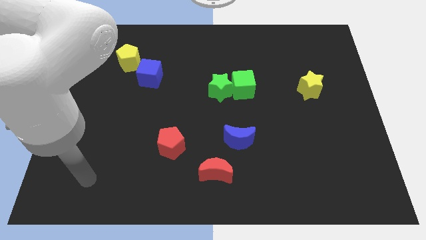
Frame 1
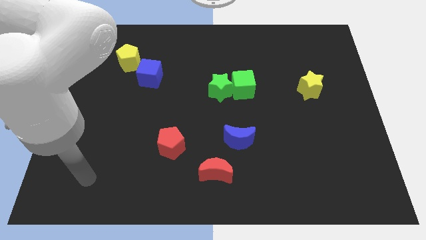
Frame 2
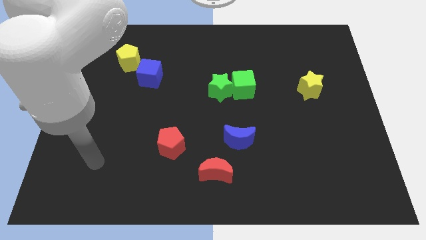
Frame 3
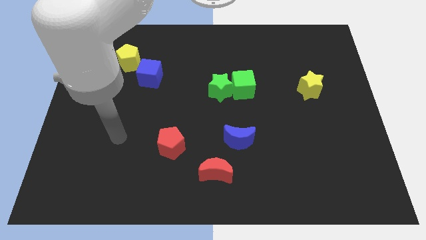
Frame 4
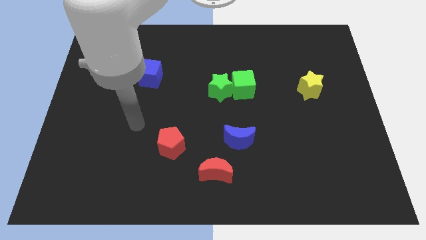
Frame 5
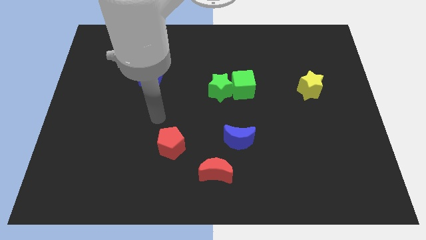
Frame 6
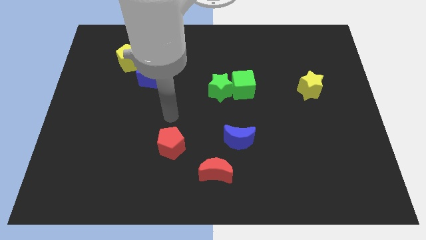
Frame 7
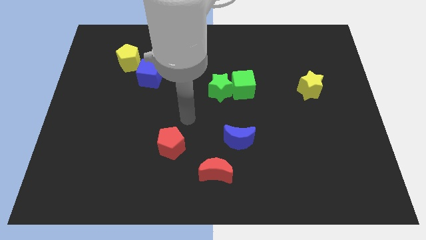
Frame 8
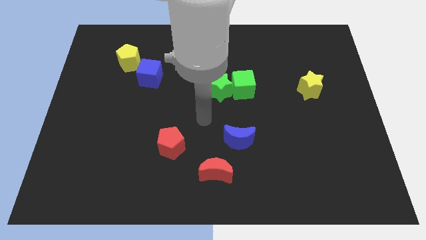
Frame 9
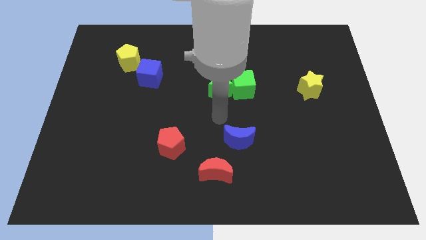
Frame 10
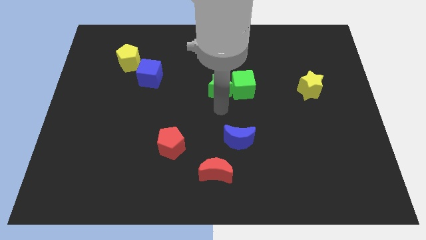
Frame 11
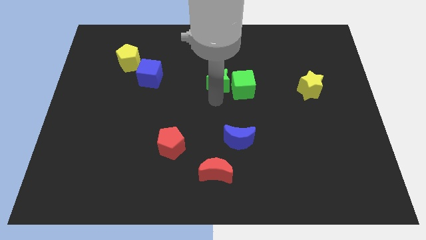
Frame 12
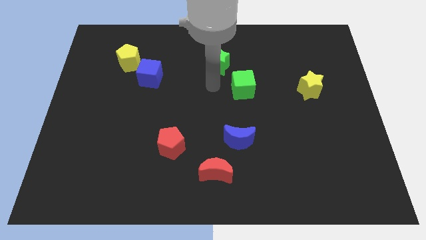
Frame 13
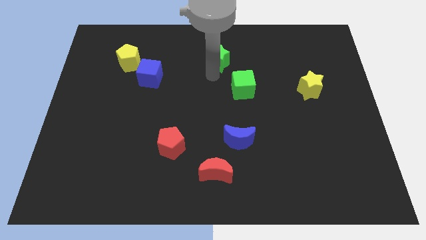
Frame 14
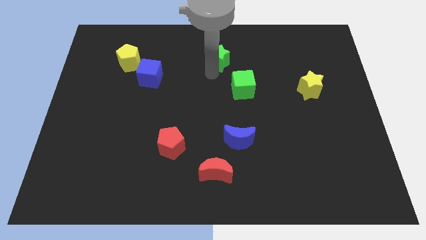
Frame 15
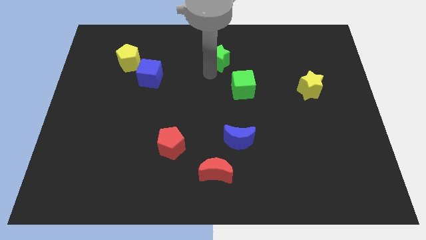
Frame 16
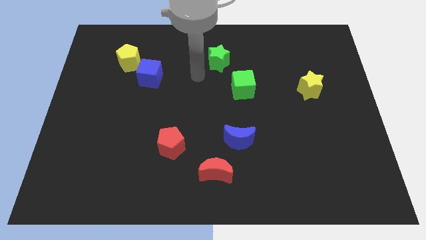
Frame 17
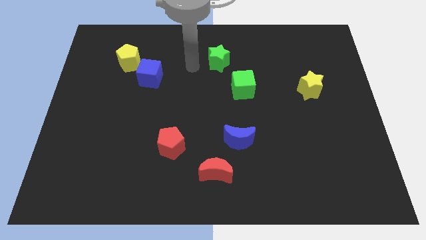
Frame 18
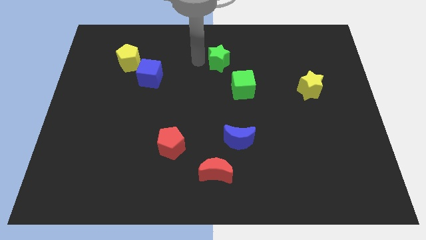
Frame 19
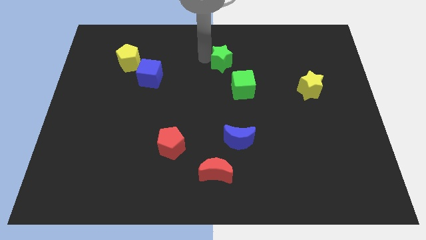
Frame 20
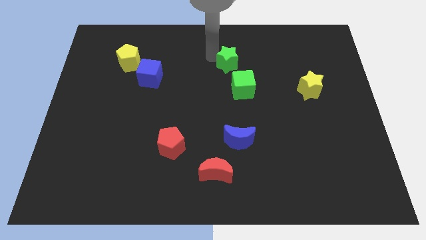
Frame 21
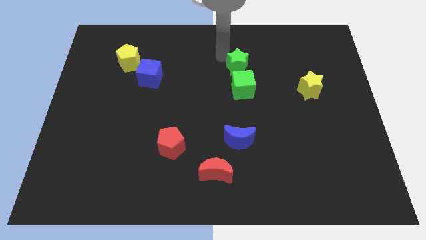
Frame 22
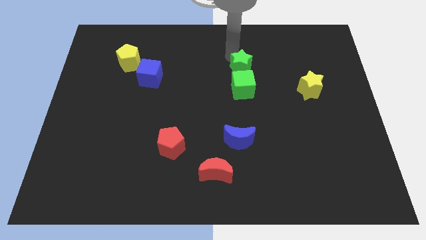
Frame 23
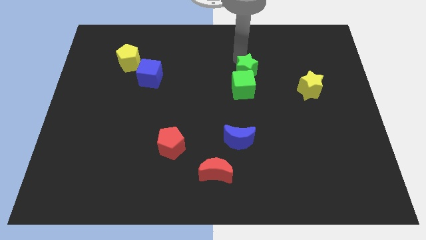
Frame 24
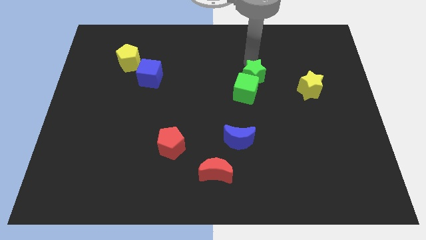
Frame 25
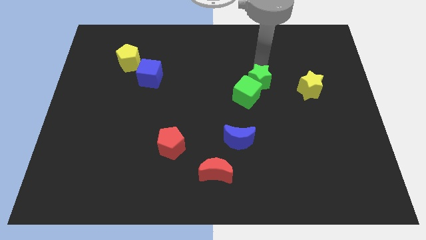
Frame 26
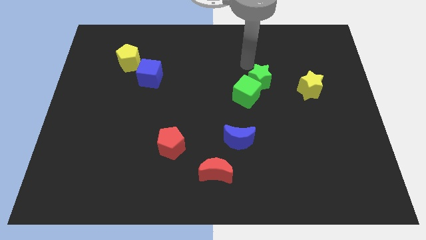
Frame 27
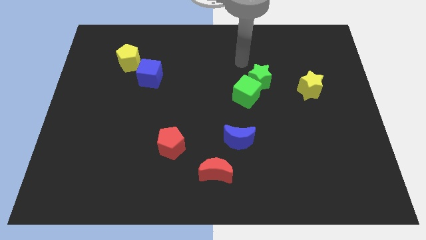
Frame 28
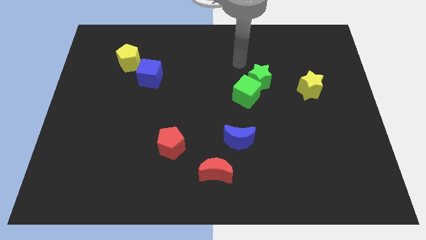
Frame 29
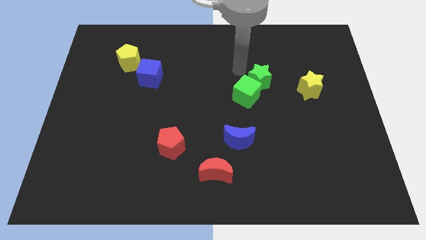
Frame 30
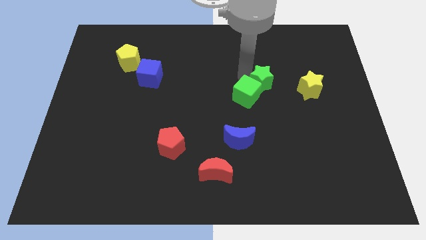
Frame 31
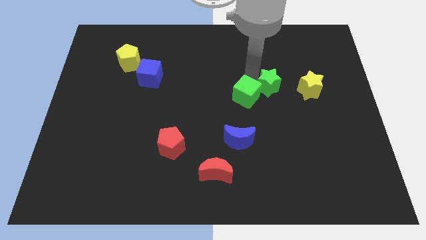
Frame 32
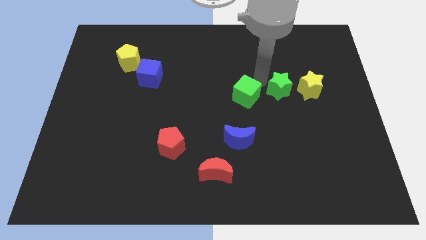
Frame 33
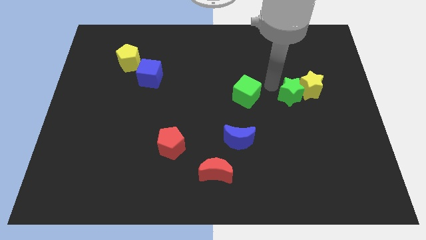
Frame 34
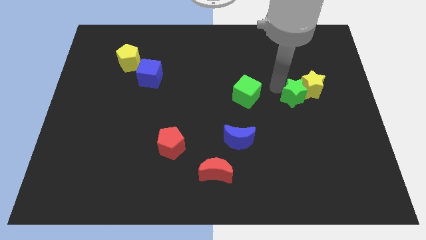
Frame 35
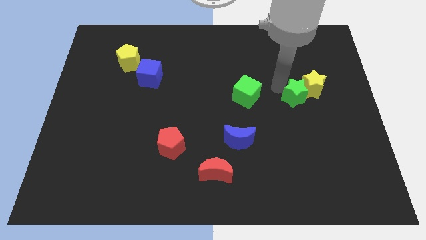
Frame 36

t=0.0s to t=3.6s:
move the green star next to the yellow star

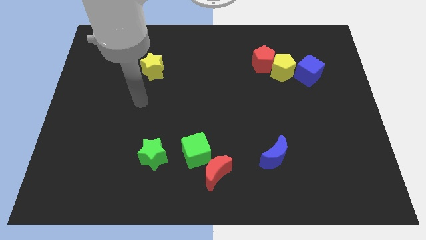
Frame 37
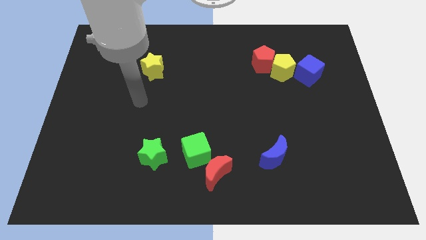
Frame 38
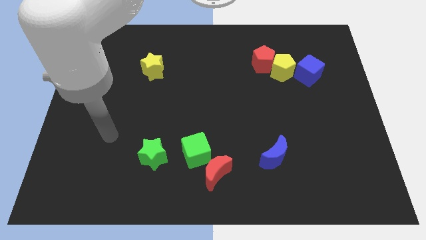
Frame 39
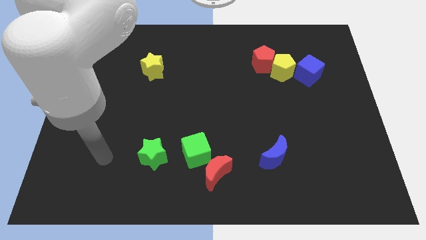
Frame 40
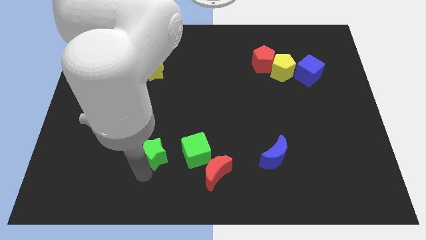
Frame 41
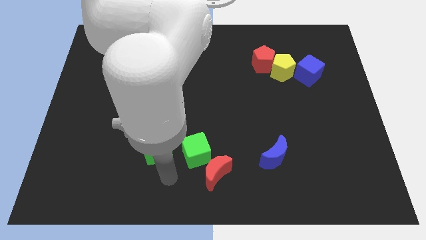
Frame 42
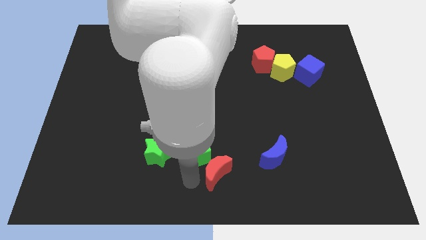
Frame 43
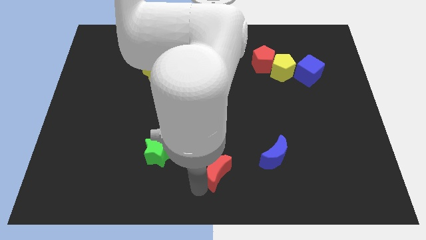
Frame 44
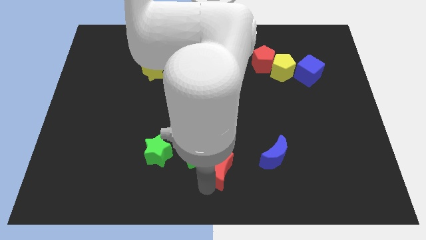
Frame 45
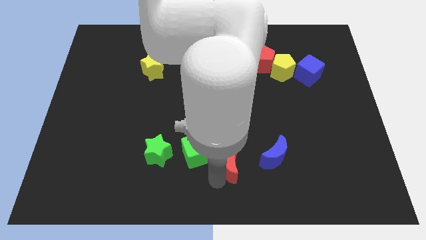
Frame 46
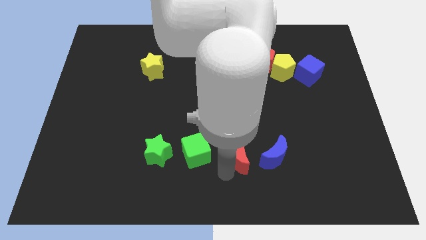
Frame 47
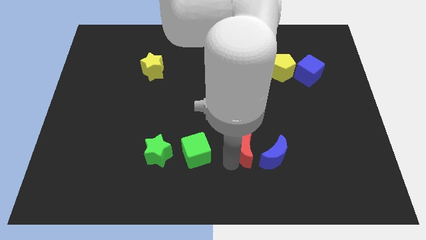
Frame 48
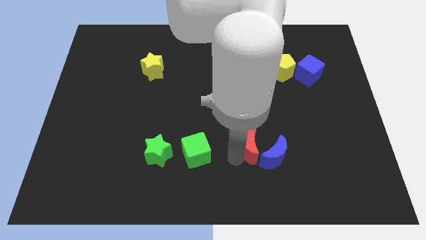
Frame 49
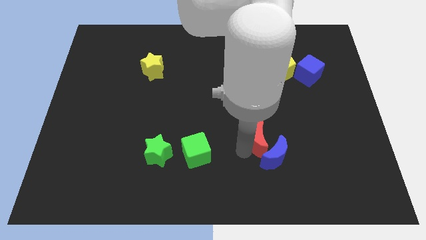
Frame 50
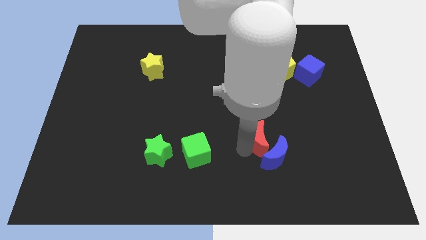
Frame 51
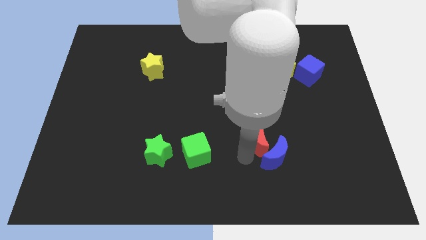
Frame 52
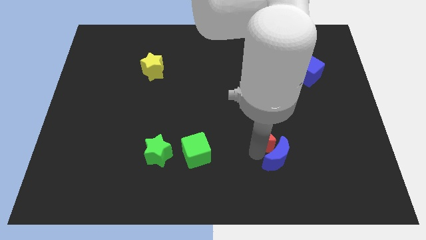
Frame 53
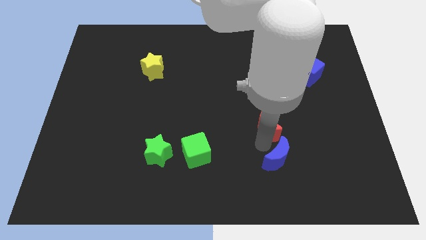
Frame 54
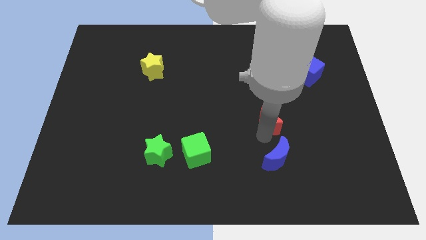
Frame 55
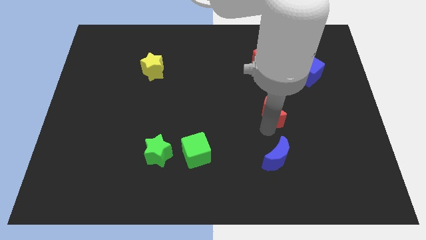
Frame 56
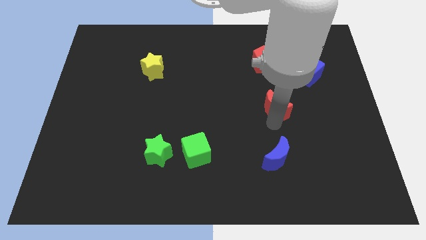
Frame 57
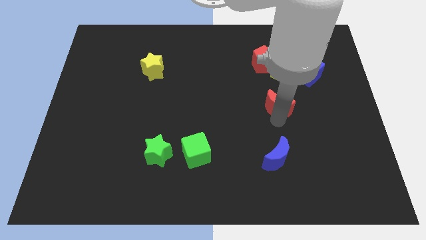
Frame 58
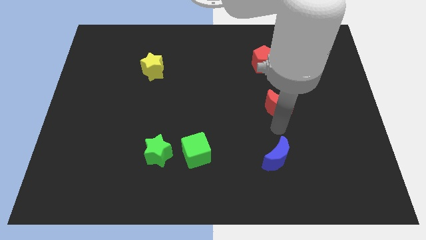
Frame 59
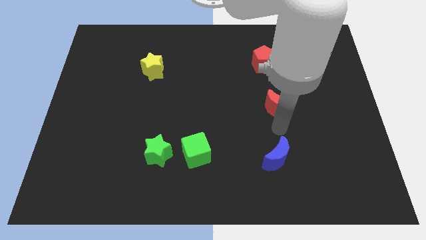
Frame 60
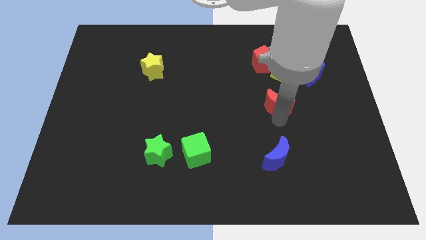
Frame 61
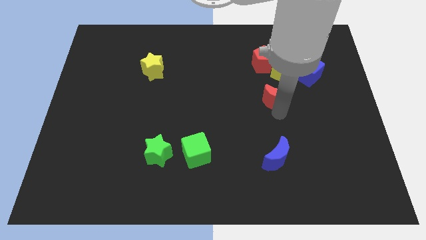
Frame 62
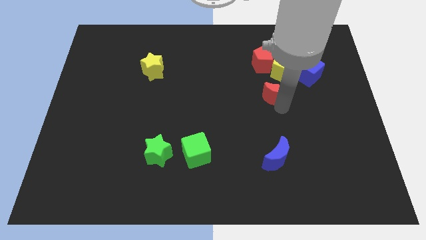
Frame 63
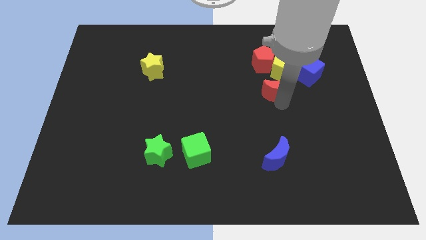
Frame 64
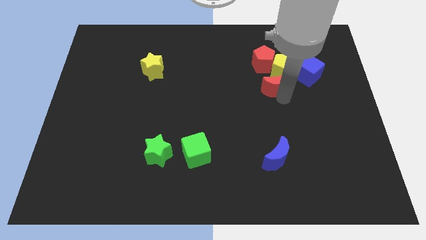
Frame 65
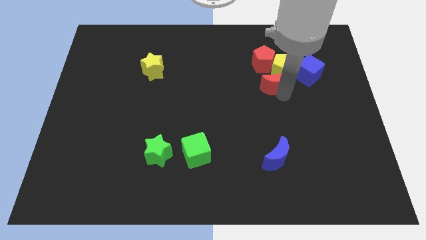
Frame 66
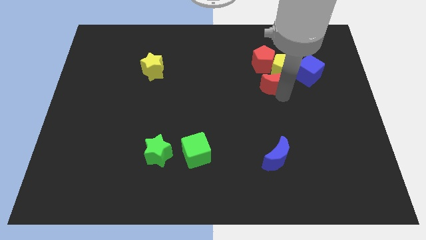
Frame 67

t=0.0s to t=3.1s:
put the red moon to the yellow pentagon

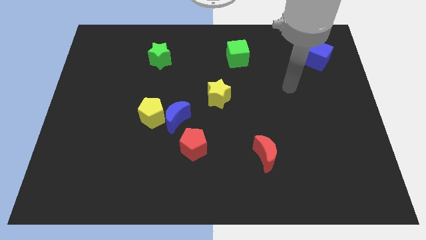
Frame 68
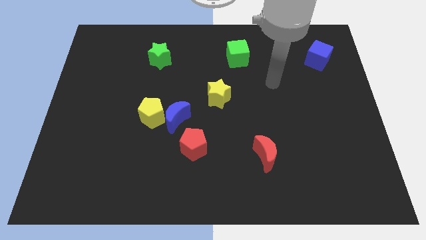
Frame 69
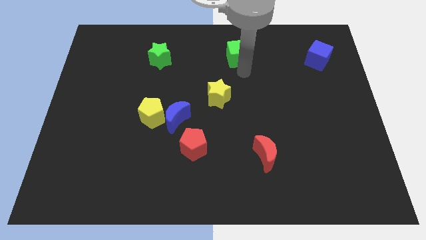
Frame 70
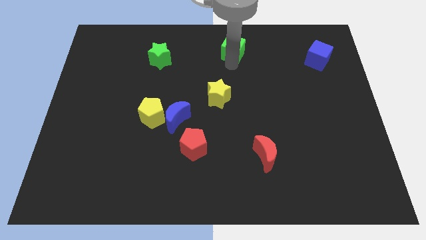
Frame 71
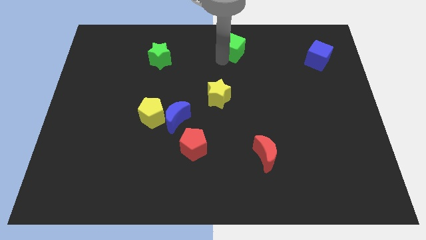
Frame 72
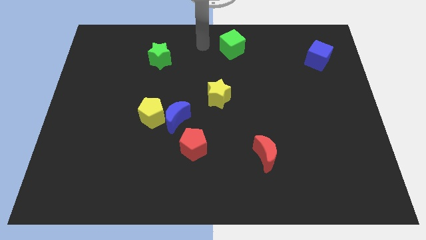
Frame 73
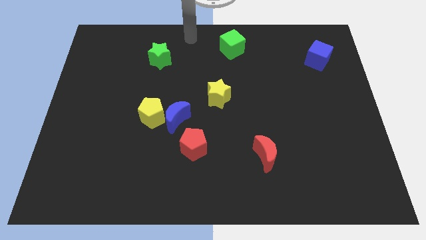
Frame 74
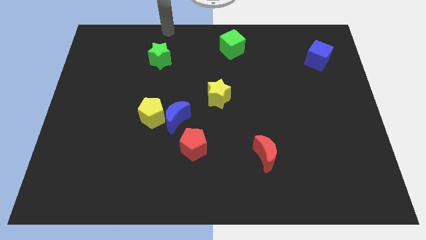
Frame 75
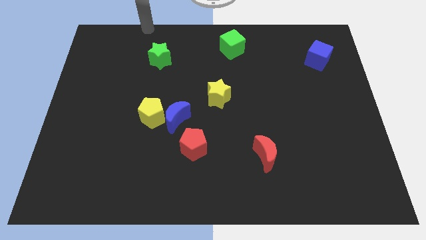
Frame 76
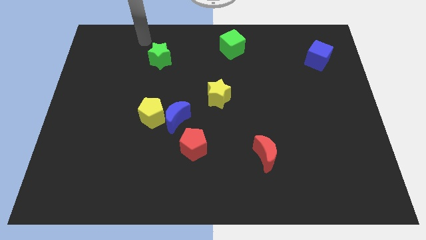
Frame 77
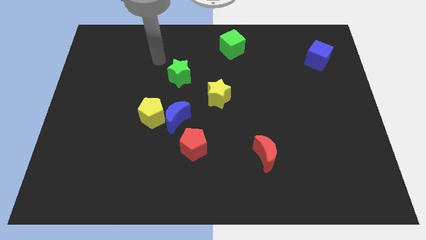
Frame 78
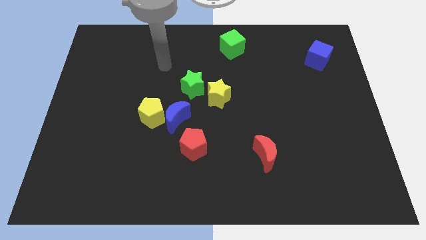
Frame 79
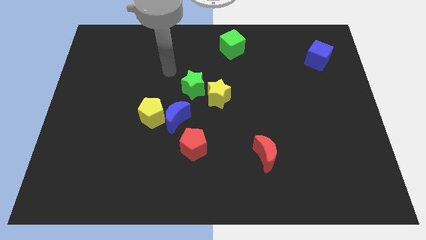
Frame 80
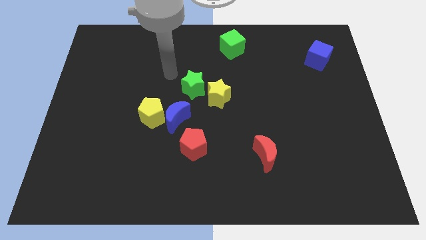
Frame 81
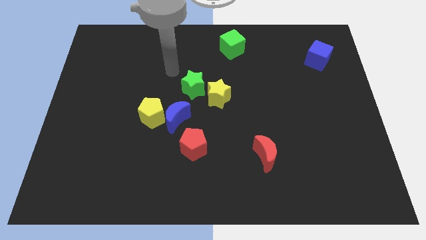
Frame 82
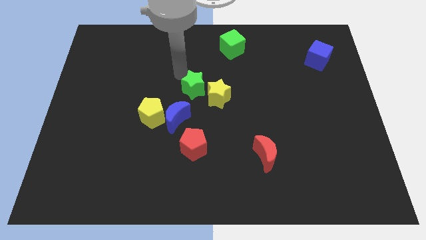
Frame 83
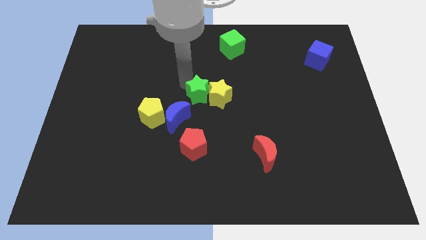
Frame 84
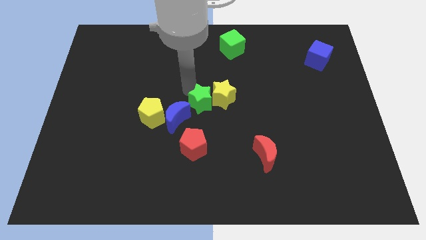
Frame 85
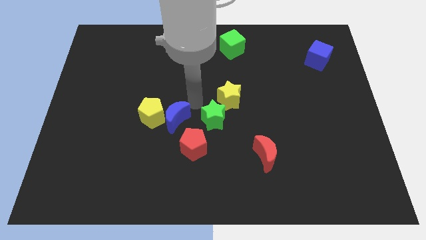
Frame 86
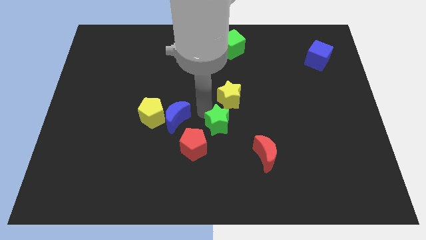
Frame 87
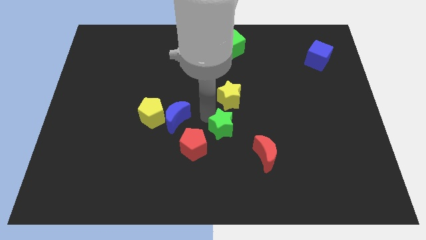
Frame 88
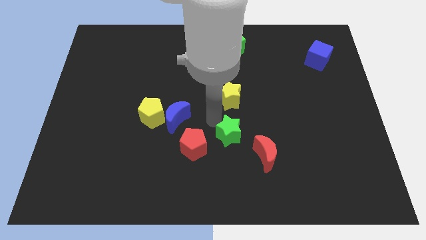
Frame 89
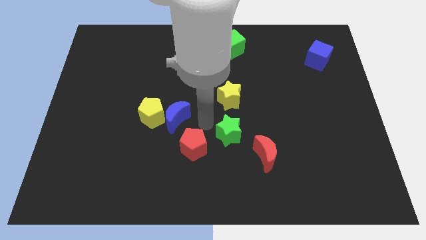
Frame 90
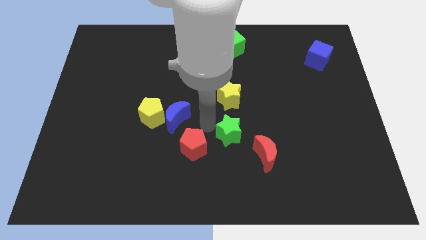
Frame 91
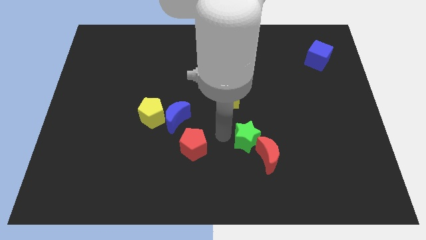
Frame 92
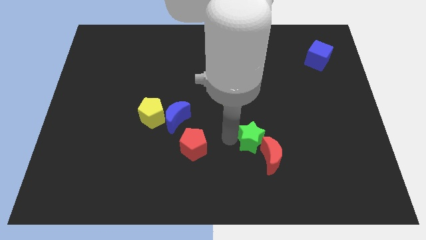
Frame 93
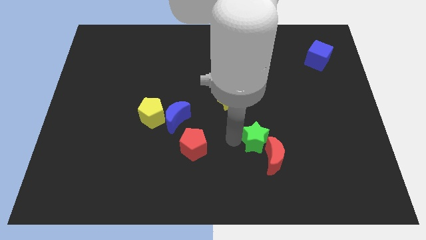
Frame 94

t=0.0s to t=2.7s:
push the green star next to the red moon
